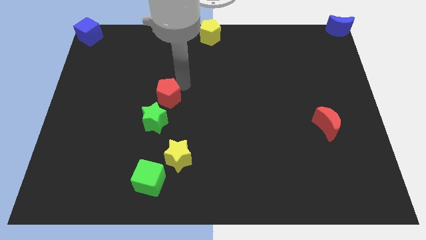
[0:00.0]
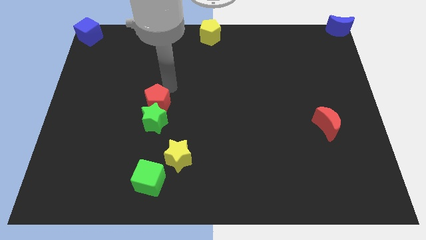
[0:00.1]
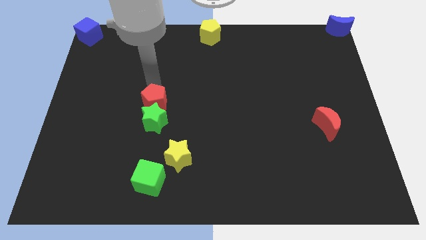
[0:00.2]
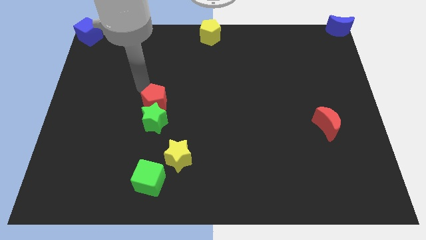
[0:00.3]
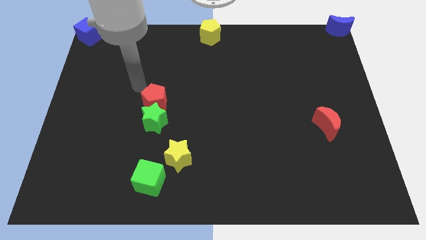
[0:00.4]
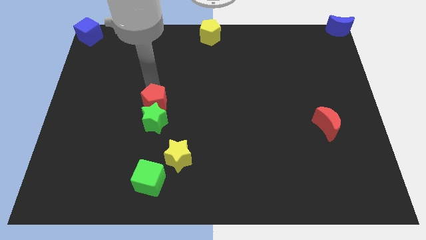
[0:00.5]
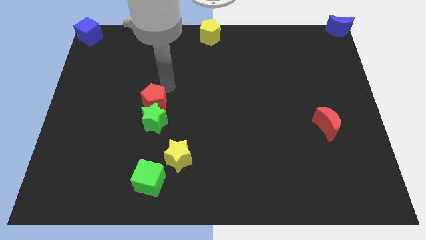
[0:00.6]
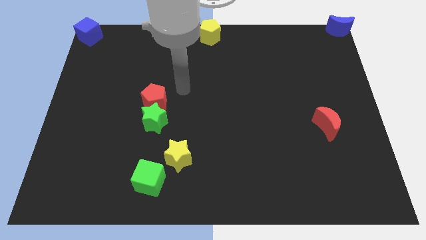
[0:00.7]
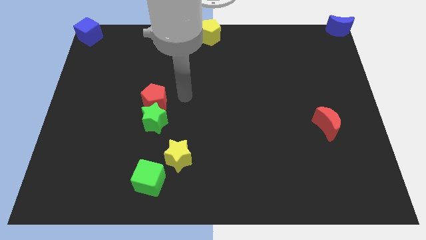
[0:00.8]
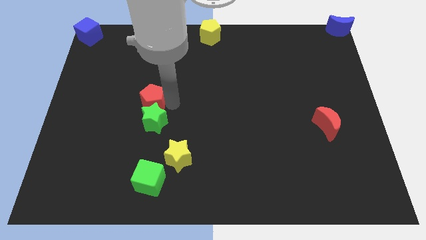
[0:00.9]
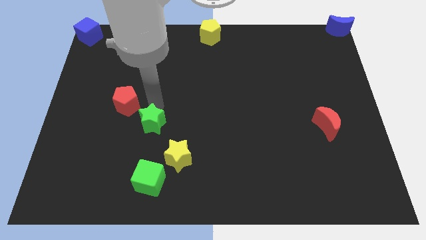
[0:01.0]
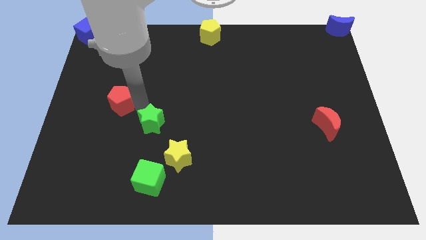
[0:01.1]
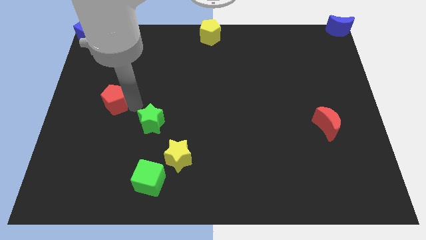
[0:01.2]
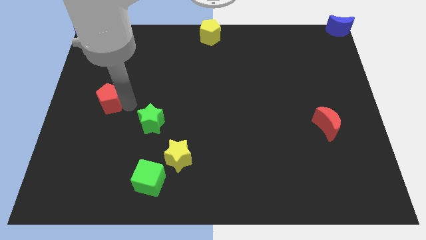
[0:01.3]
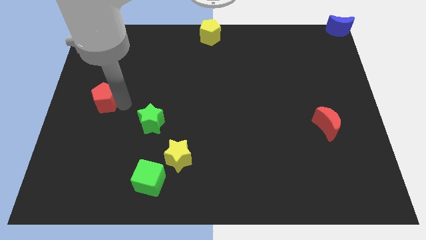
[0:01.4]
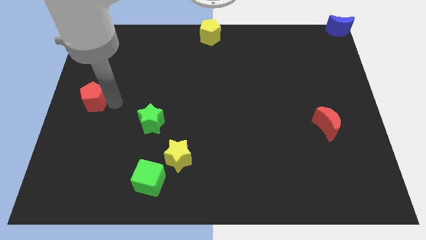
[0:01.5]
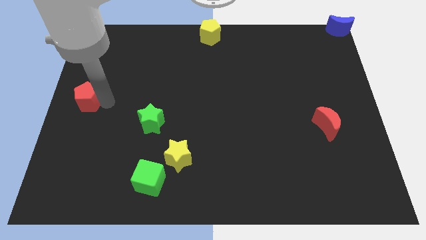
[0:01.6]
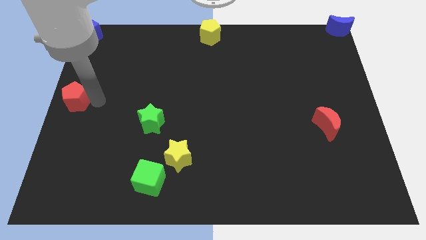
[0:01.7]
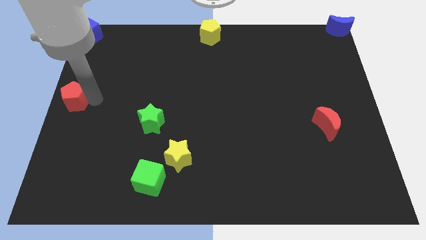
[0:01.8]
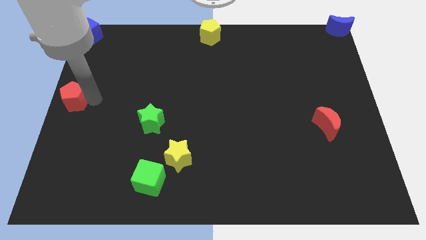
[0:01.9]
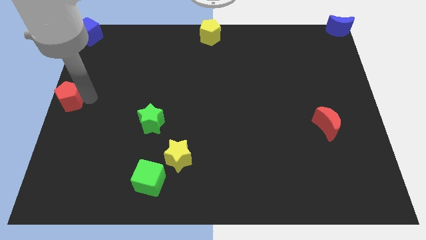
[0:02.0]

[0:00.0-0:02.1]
slide red pentagon at the center left

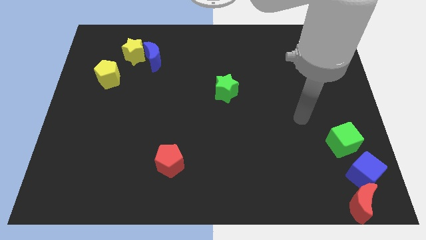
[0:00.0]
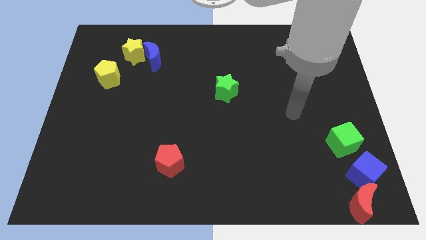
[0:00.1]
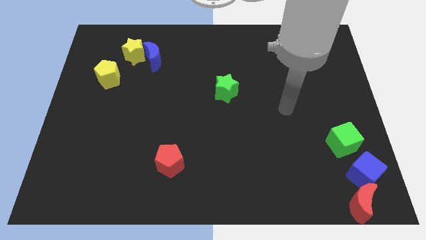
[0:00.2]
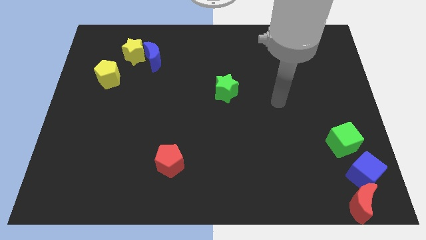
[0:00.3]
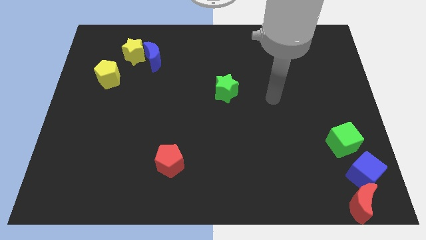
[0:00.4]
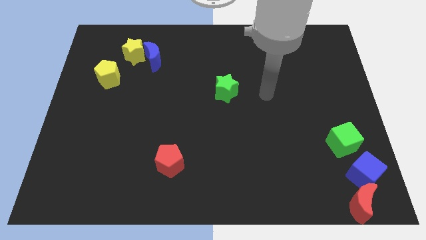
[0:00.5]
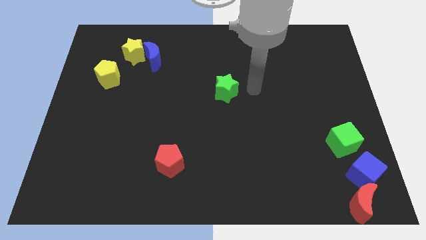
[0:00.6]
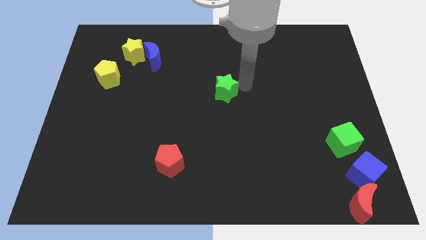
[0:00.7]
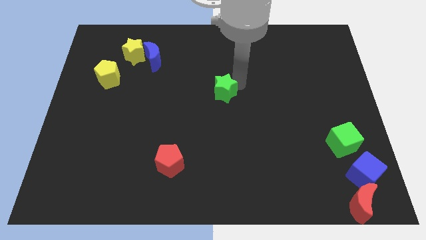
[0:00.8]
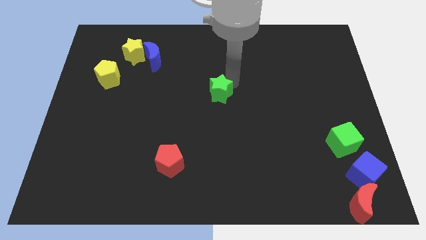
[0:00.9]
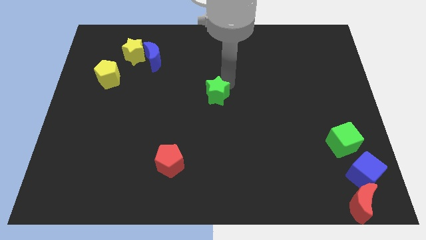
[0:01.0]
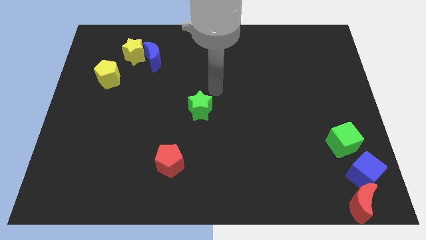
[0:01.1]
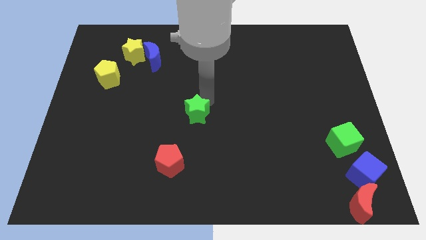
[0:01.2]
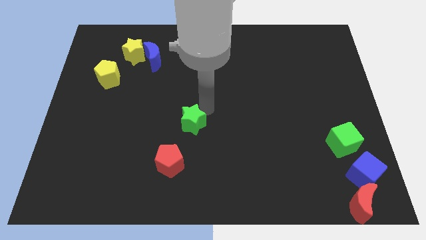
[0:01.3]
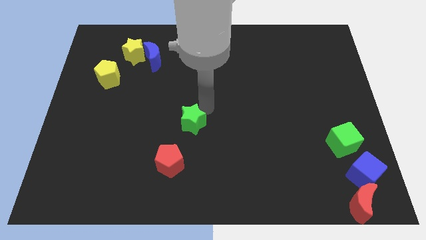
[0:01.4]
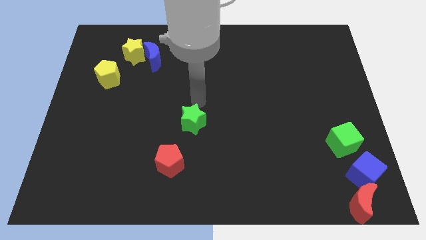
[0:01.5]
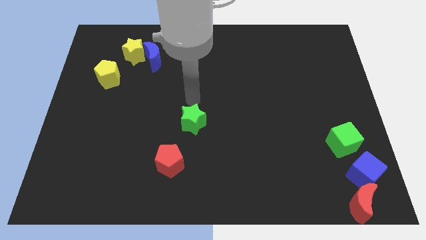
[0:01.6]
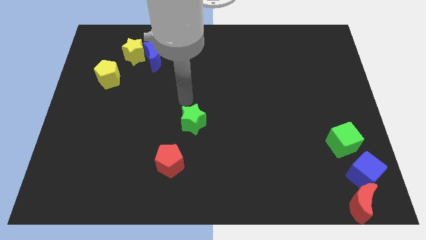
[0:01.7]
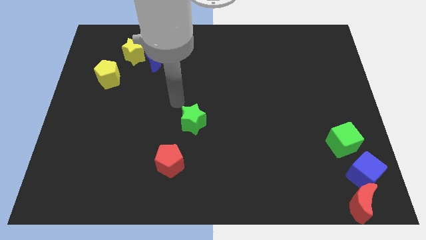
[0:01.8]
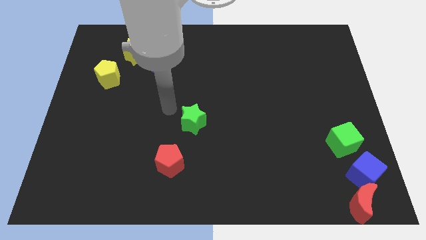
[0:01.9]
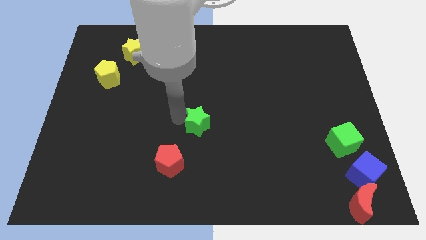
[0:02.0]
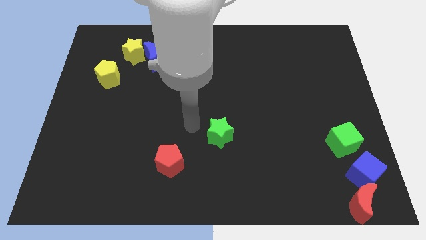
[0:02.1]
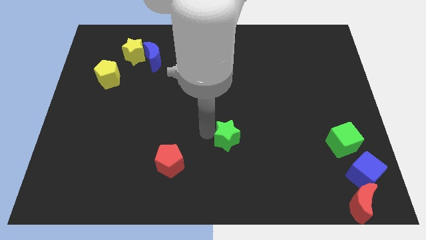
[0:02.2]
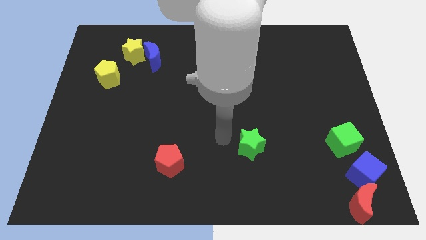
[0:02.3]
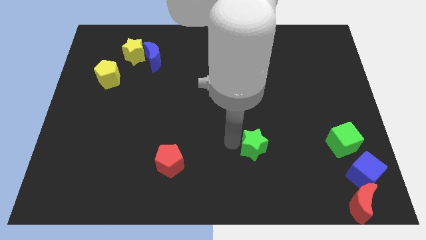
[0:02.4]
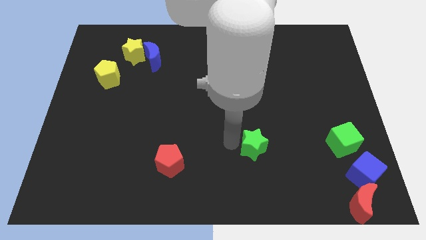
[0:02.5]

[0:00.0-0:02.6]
put the green star to the left of the green cube

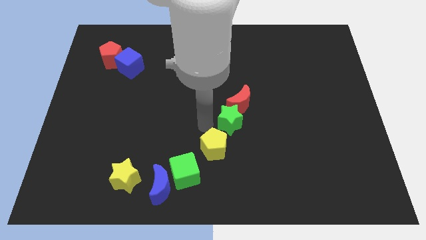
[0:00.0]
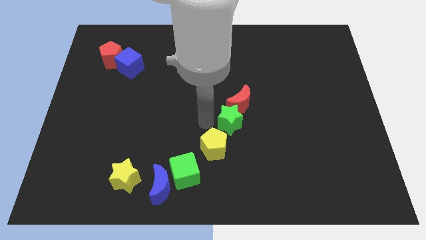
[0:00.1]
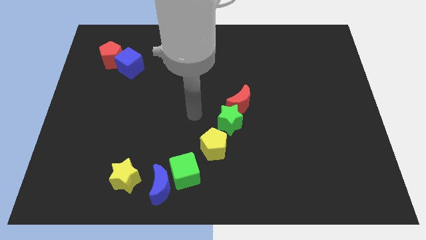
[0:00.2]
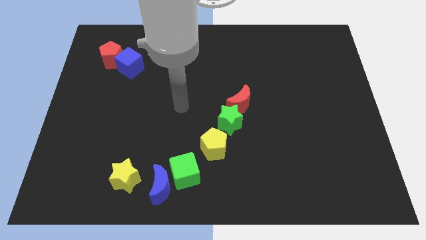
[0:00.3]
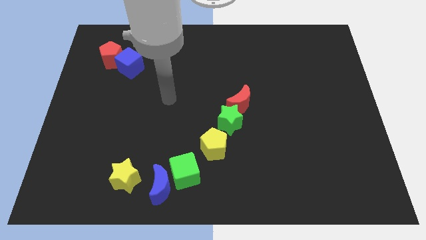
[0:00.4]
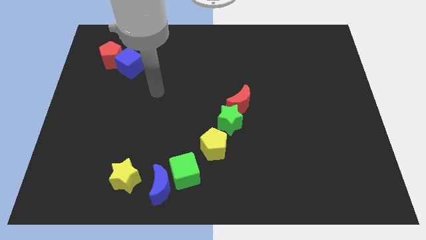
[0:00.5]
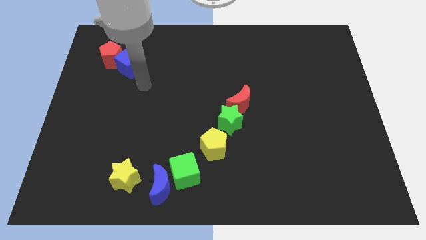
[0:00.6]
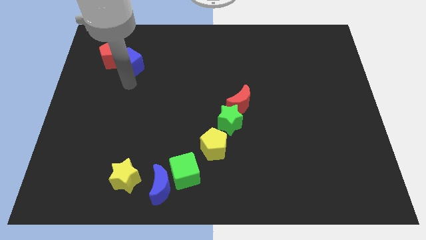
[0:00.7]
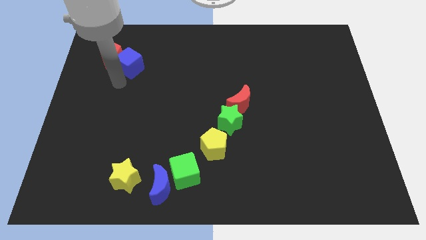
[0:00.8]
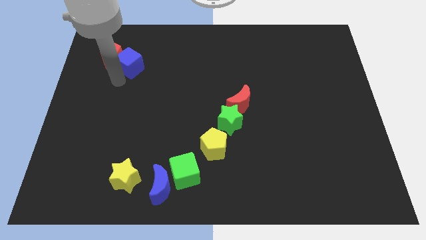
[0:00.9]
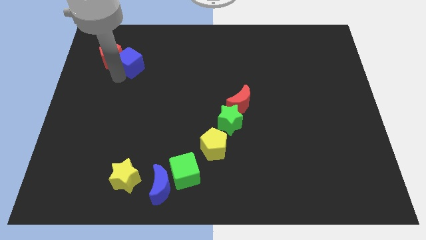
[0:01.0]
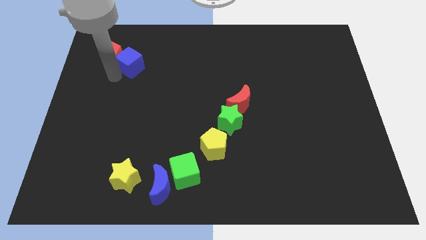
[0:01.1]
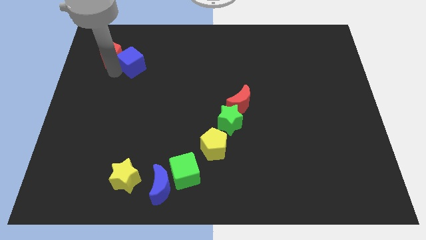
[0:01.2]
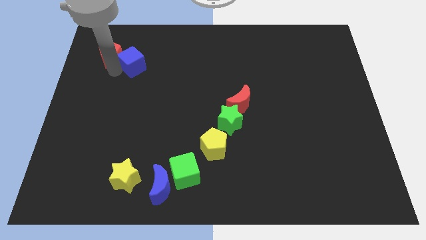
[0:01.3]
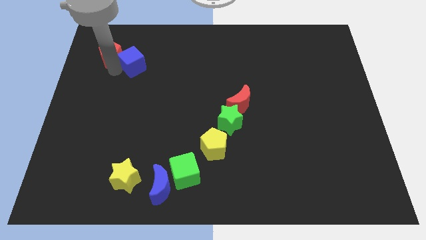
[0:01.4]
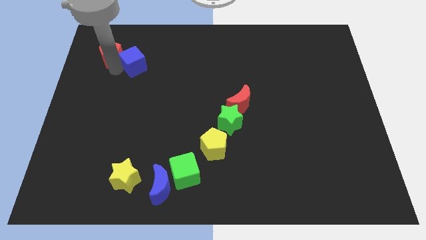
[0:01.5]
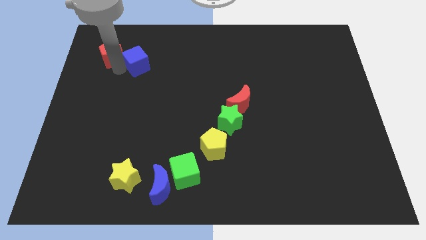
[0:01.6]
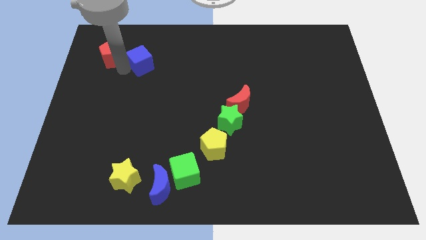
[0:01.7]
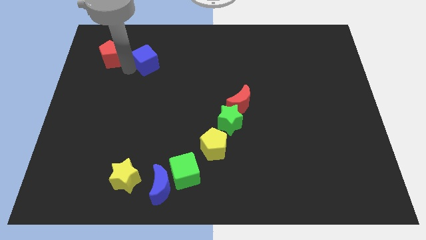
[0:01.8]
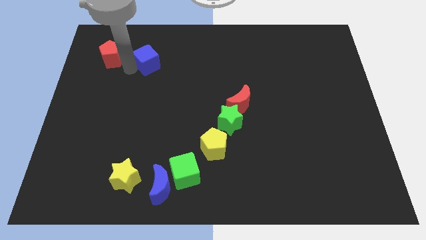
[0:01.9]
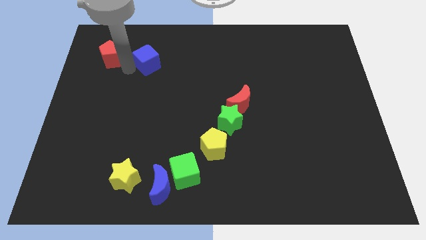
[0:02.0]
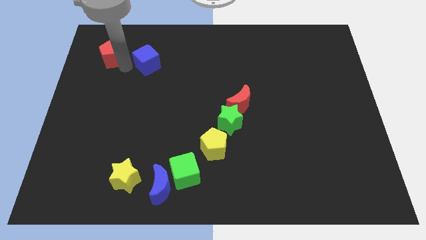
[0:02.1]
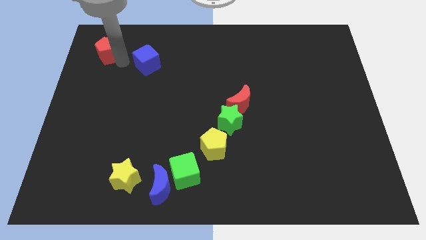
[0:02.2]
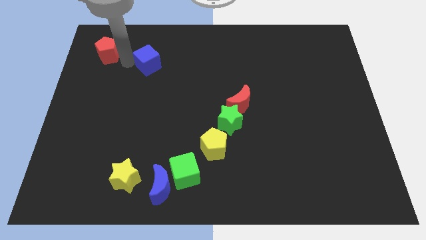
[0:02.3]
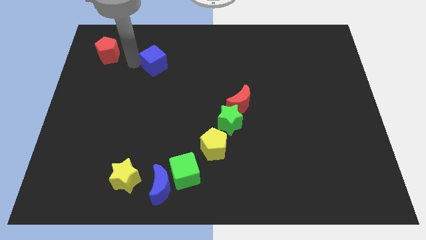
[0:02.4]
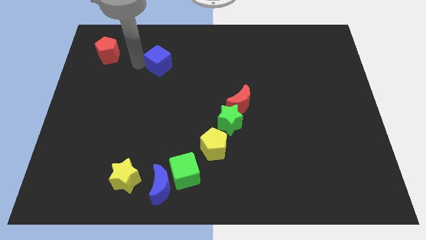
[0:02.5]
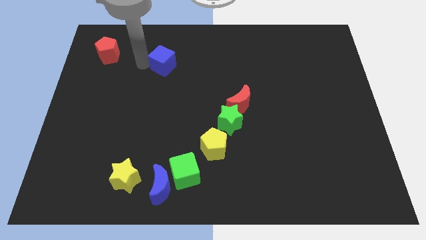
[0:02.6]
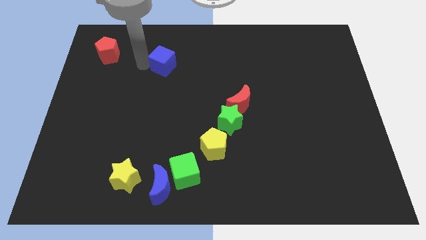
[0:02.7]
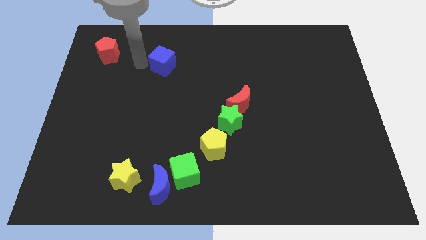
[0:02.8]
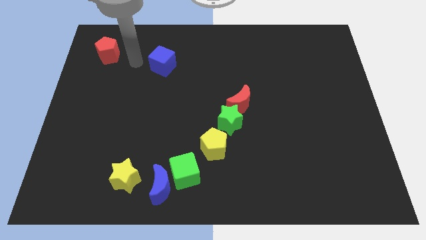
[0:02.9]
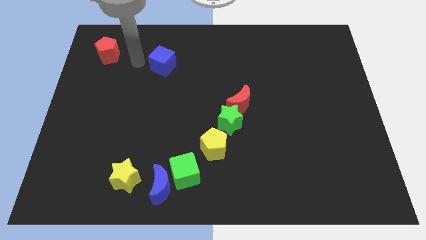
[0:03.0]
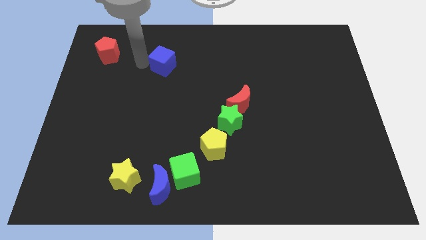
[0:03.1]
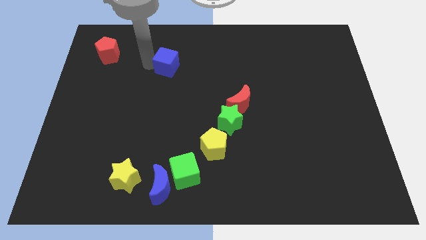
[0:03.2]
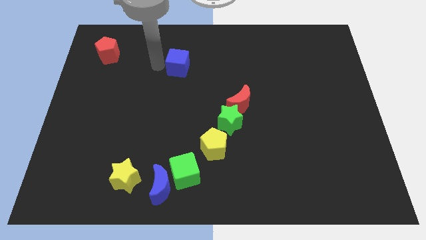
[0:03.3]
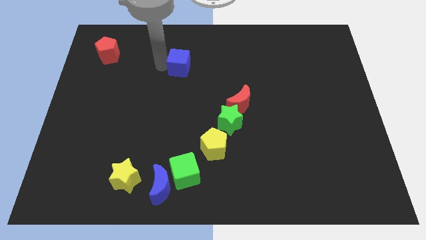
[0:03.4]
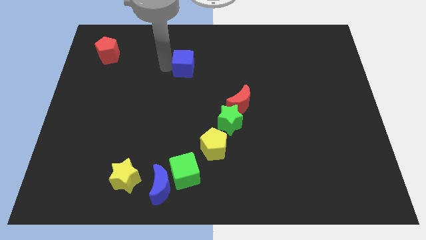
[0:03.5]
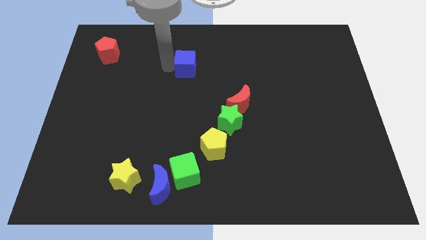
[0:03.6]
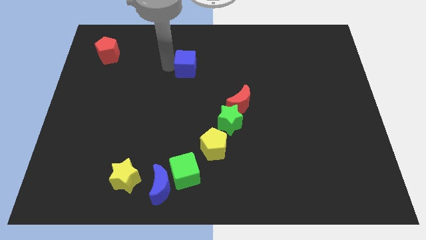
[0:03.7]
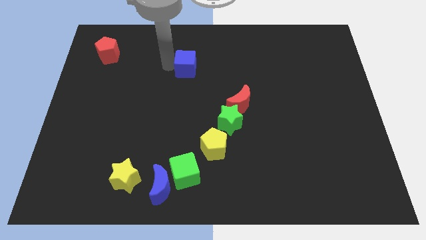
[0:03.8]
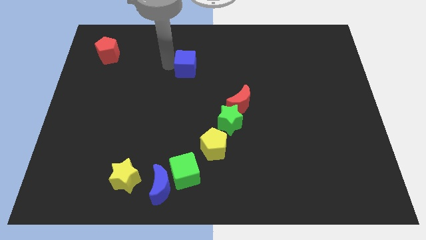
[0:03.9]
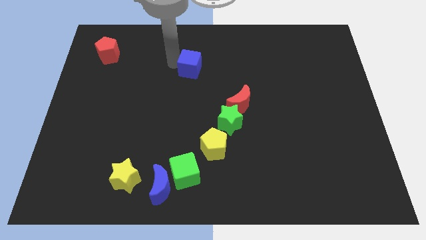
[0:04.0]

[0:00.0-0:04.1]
separate the blue cube away from the red crescent

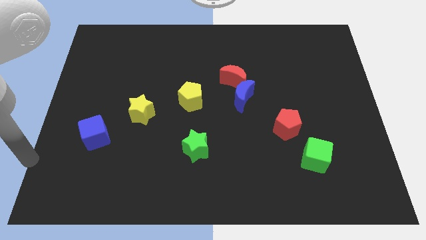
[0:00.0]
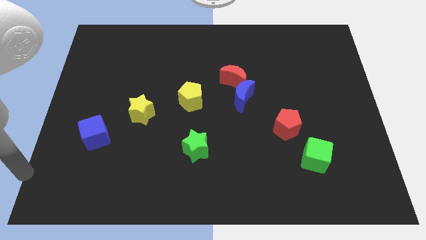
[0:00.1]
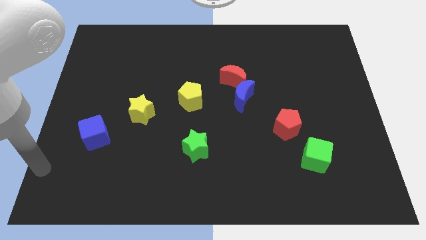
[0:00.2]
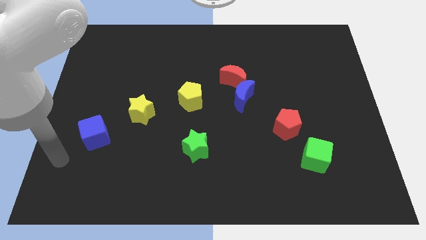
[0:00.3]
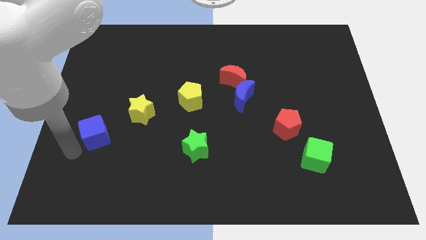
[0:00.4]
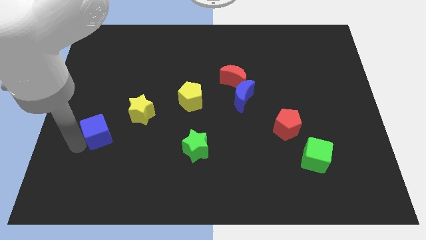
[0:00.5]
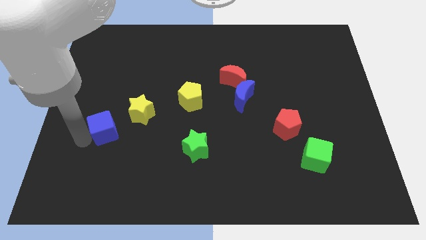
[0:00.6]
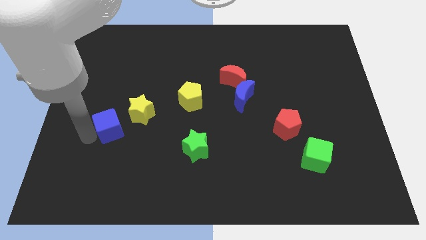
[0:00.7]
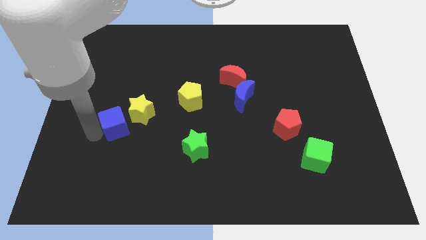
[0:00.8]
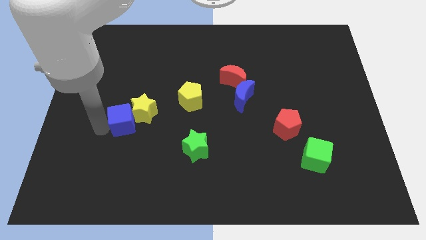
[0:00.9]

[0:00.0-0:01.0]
push the blue cube to the left of the yellow star
